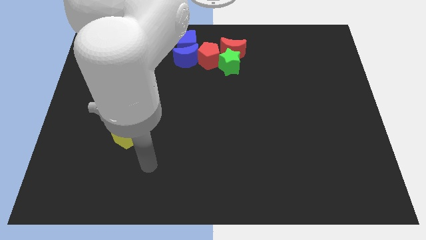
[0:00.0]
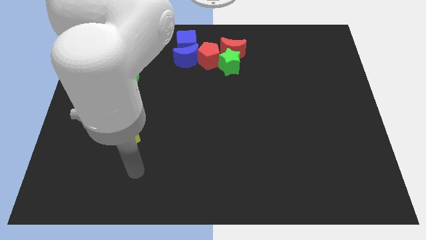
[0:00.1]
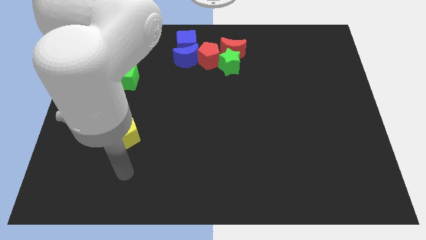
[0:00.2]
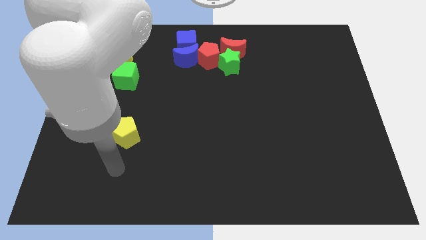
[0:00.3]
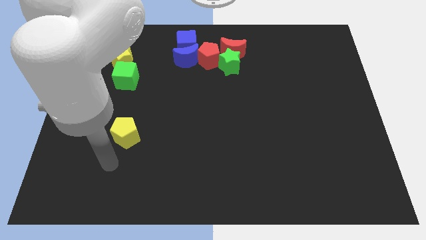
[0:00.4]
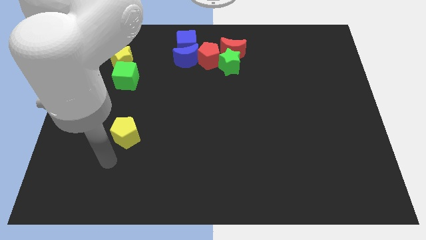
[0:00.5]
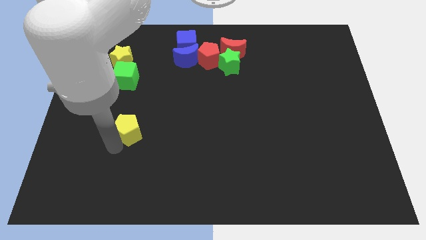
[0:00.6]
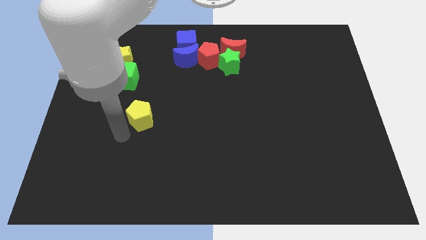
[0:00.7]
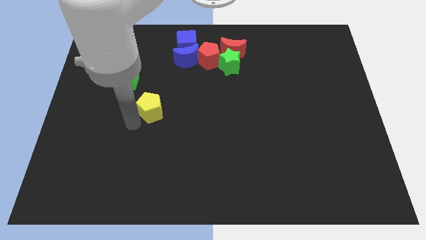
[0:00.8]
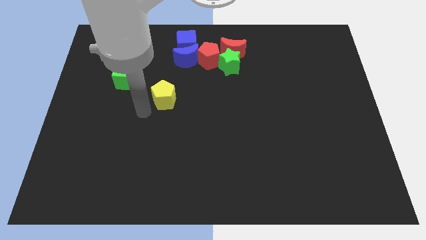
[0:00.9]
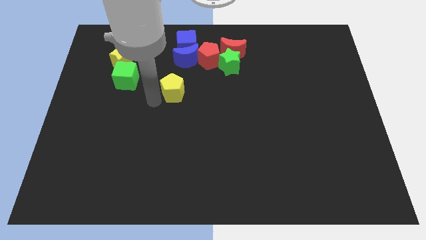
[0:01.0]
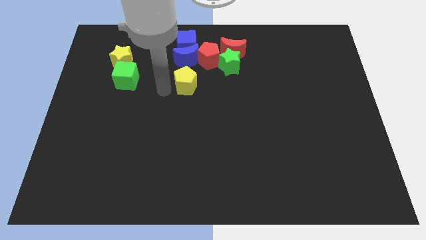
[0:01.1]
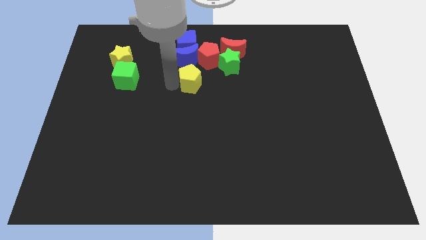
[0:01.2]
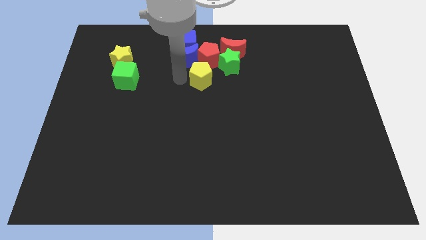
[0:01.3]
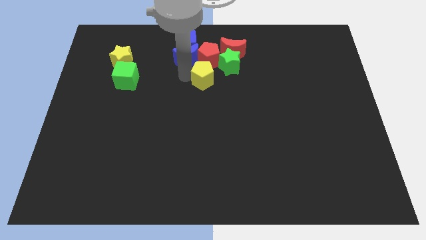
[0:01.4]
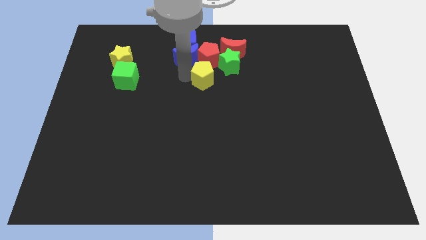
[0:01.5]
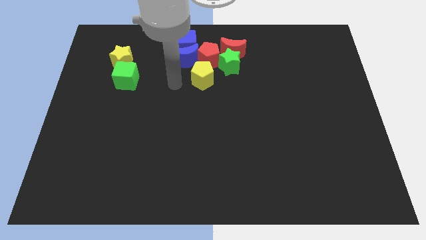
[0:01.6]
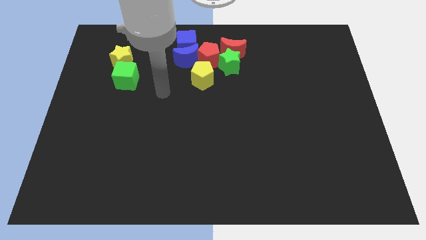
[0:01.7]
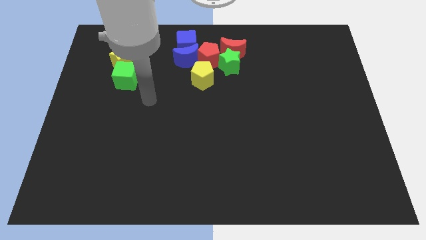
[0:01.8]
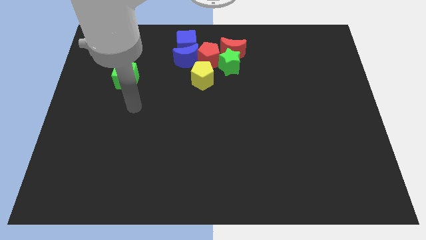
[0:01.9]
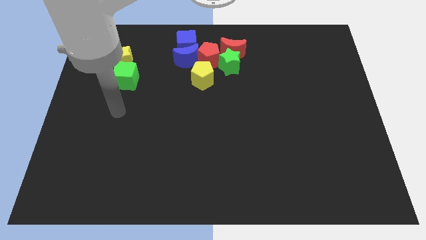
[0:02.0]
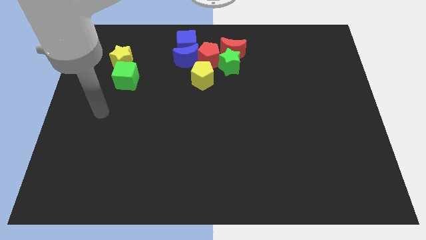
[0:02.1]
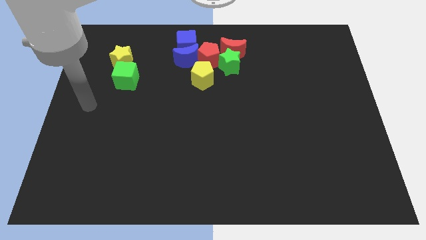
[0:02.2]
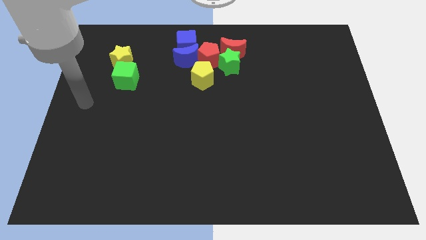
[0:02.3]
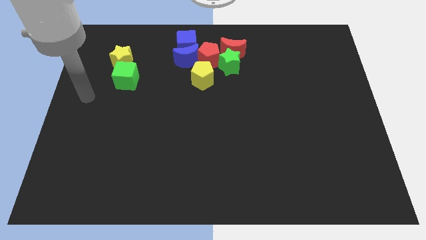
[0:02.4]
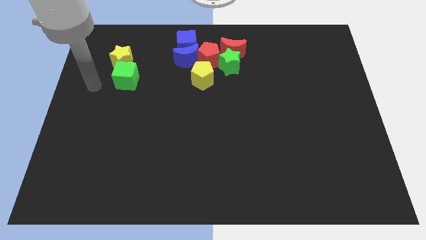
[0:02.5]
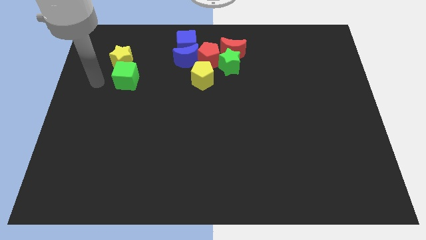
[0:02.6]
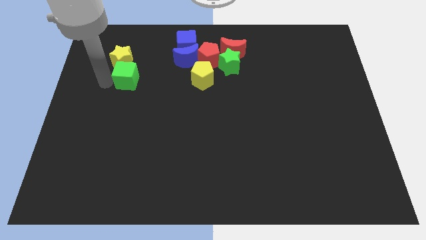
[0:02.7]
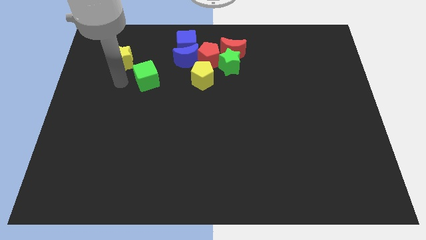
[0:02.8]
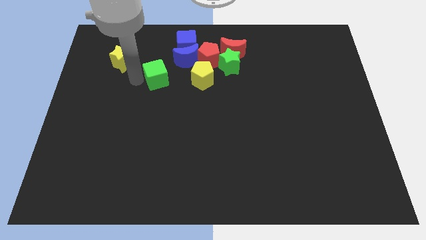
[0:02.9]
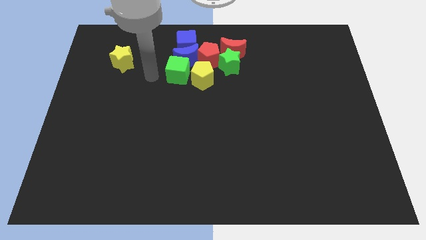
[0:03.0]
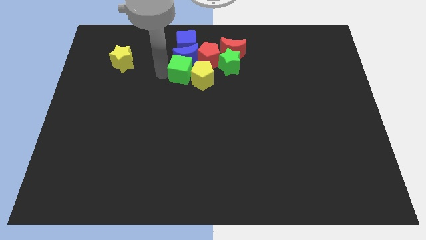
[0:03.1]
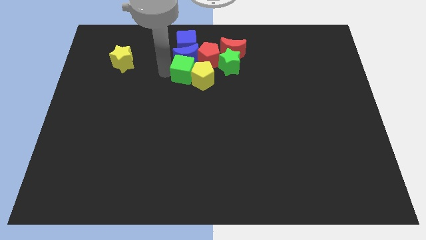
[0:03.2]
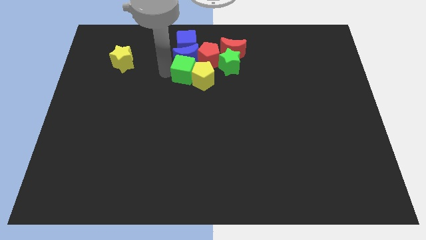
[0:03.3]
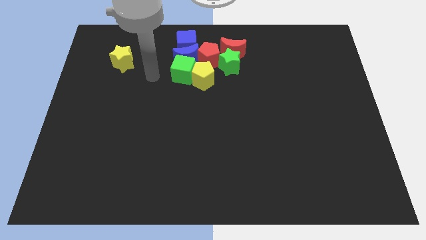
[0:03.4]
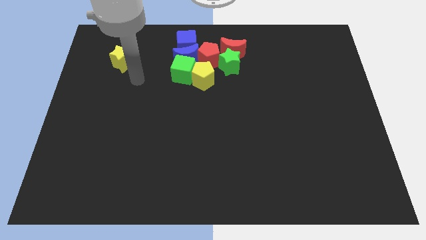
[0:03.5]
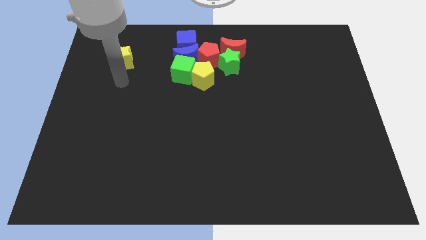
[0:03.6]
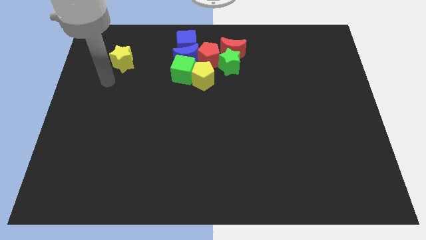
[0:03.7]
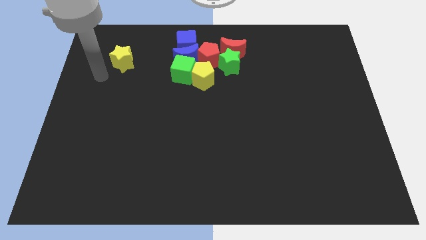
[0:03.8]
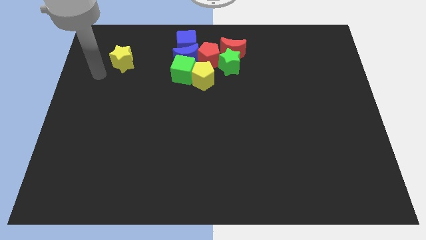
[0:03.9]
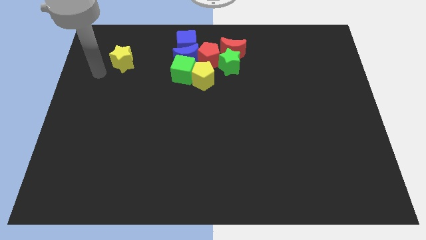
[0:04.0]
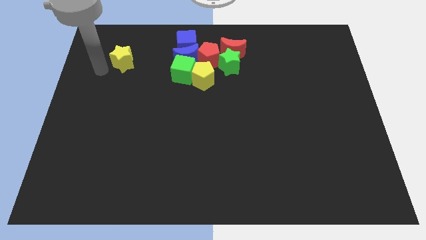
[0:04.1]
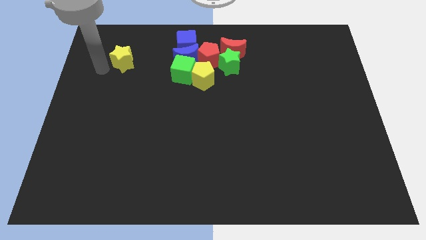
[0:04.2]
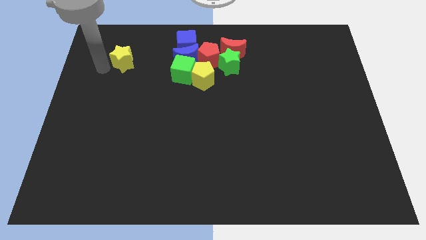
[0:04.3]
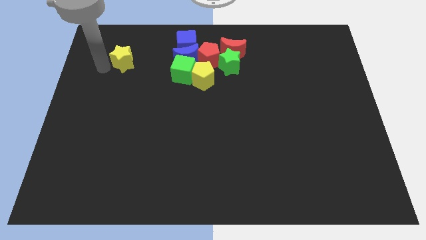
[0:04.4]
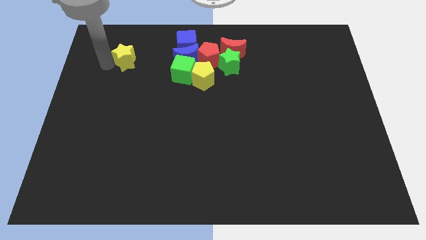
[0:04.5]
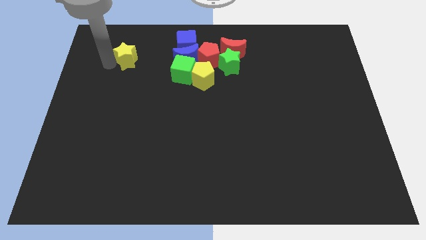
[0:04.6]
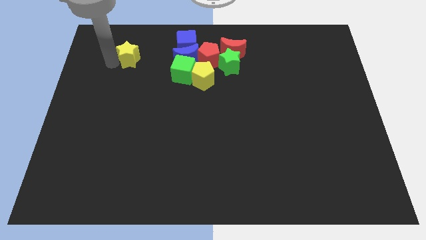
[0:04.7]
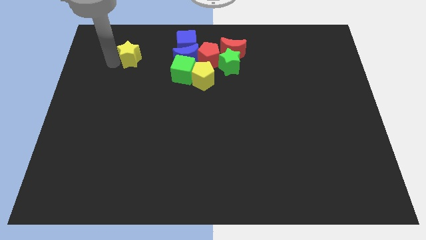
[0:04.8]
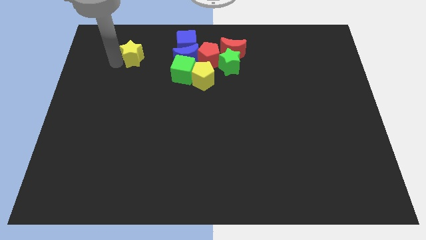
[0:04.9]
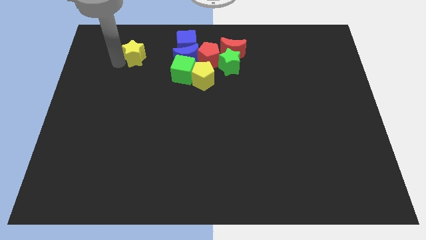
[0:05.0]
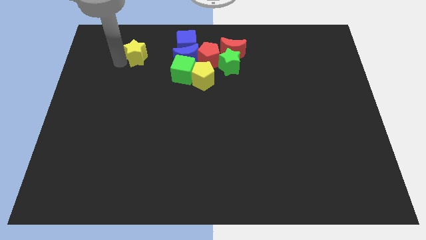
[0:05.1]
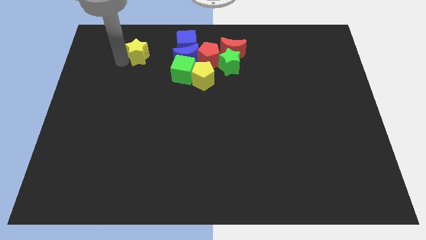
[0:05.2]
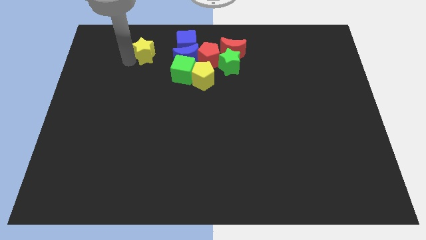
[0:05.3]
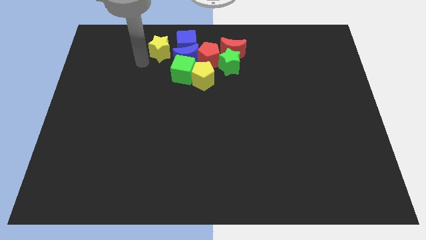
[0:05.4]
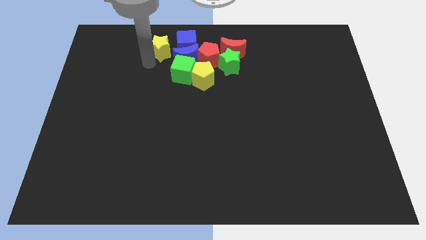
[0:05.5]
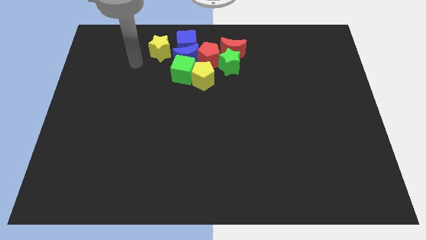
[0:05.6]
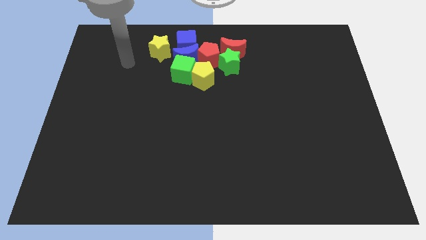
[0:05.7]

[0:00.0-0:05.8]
move yellow blocks and green cube to the group of blocks

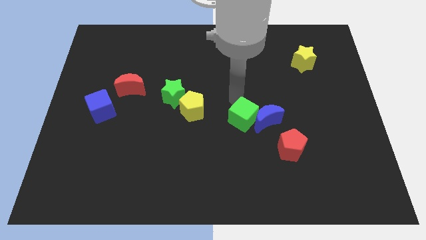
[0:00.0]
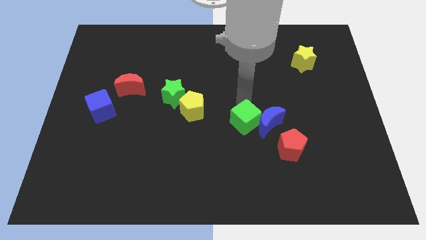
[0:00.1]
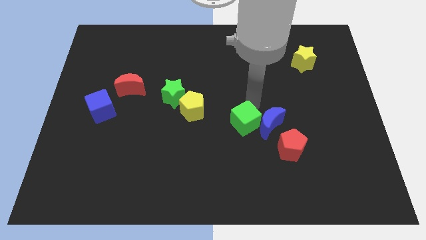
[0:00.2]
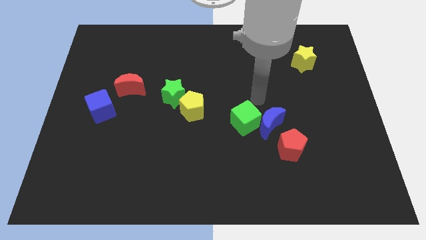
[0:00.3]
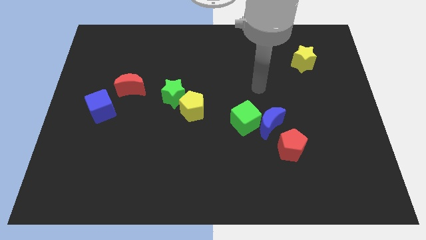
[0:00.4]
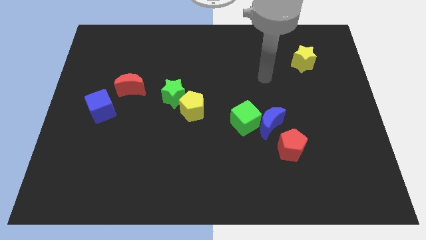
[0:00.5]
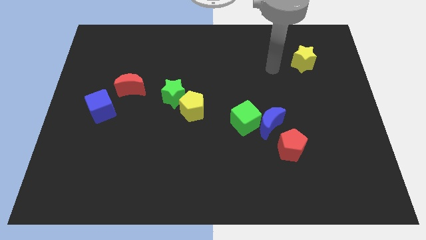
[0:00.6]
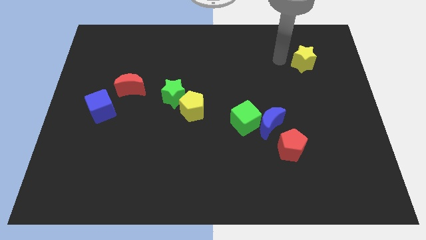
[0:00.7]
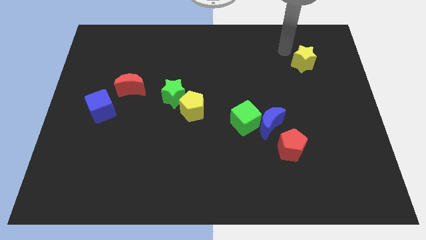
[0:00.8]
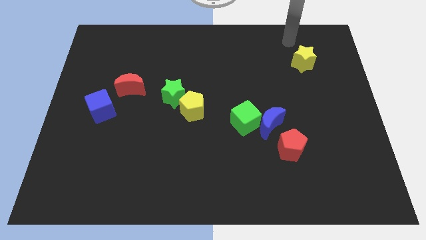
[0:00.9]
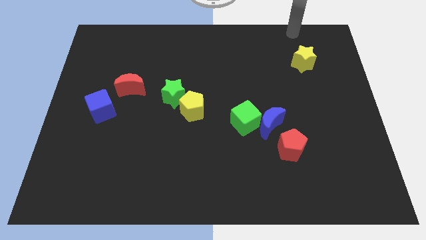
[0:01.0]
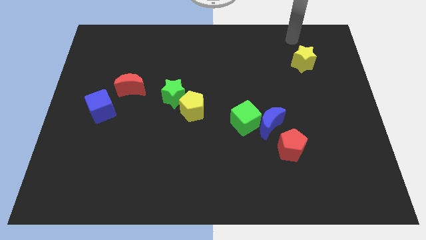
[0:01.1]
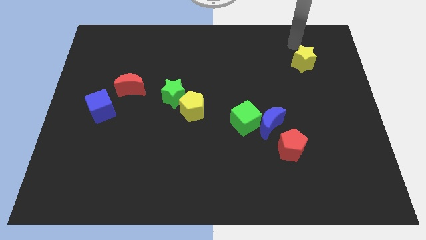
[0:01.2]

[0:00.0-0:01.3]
move the arm to the top of the yellow star

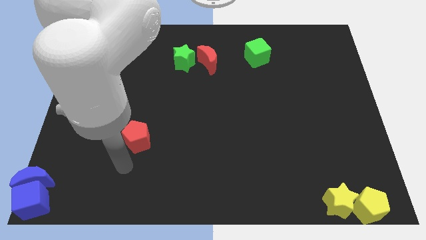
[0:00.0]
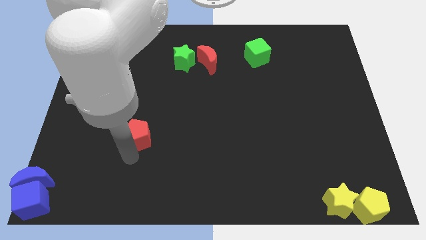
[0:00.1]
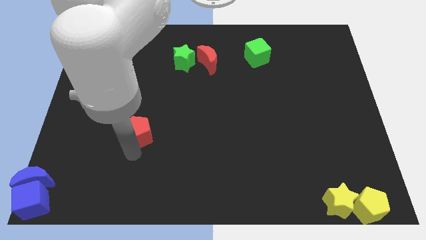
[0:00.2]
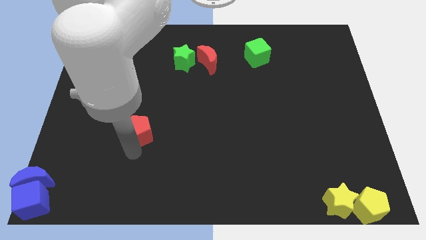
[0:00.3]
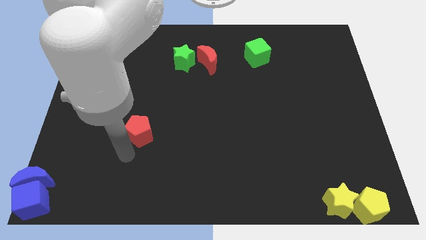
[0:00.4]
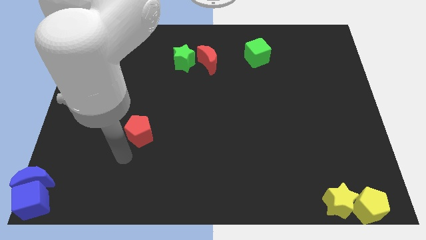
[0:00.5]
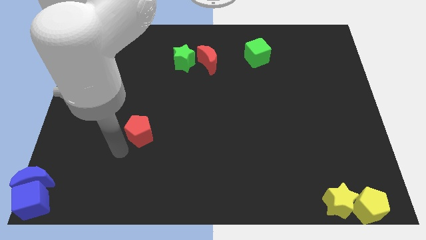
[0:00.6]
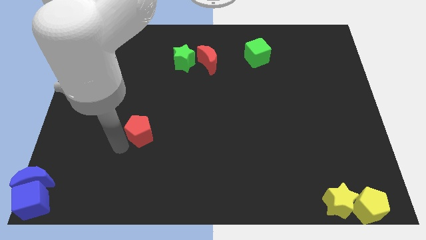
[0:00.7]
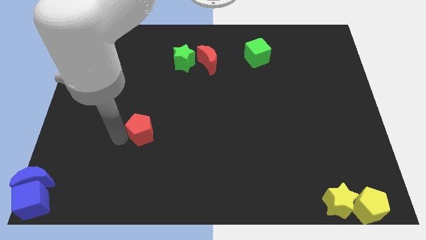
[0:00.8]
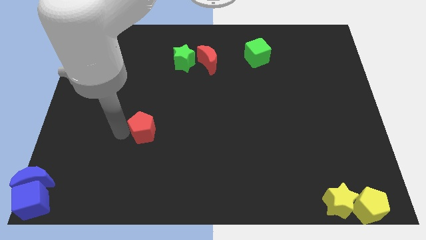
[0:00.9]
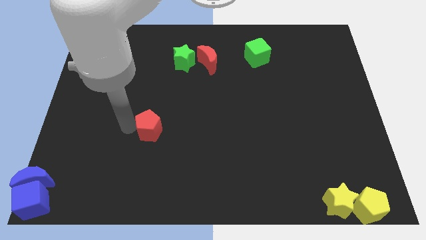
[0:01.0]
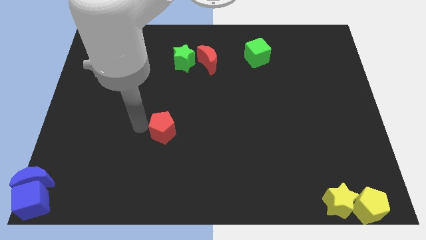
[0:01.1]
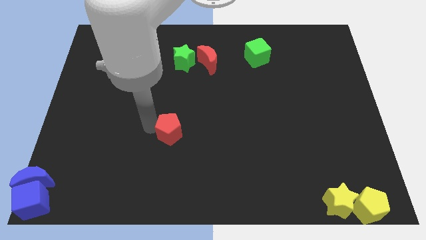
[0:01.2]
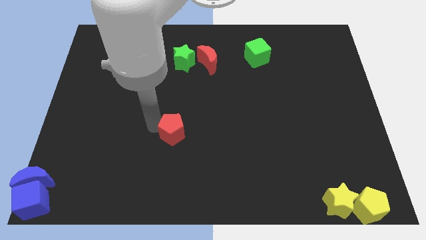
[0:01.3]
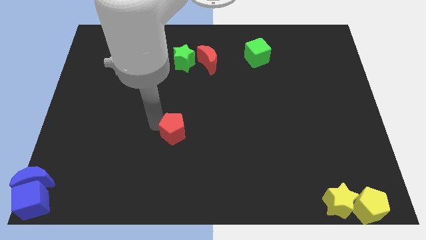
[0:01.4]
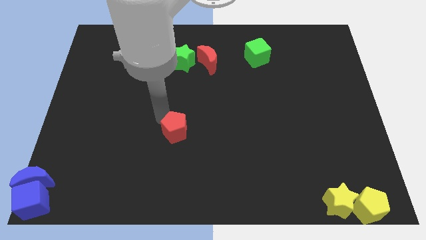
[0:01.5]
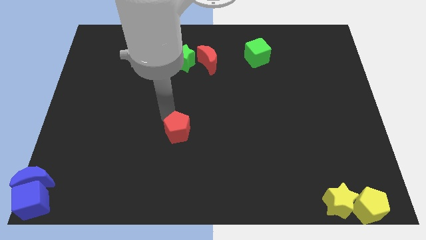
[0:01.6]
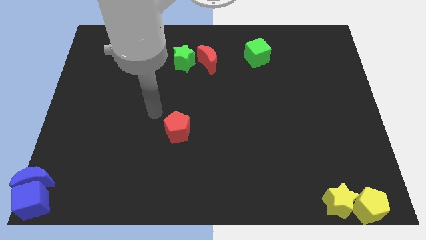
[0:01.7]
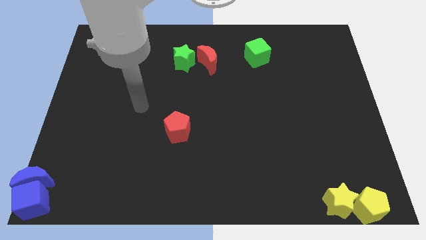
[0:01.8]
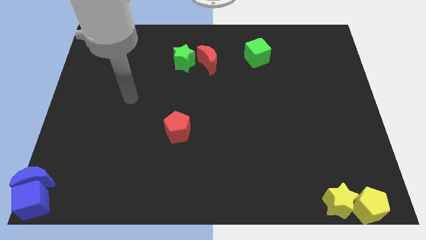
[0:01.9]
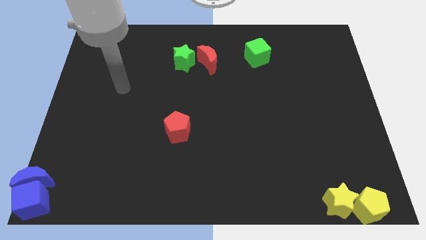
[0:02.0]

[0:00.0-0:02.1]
move the red pentagon slightly towards the bottom center of the board
